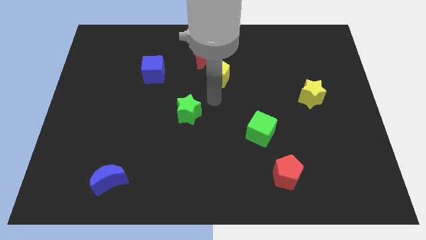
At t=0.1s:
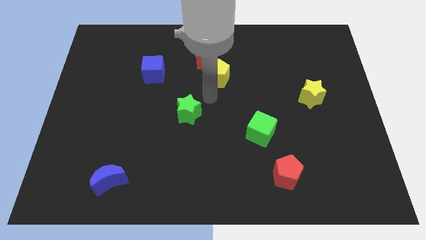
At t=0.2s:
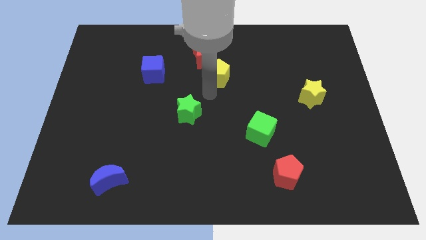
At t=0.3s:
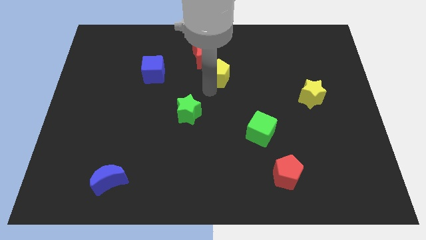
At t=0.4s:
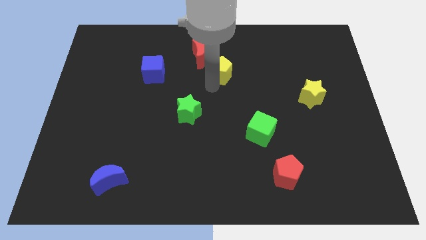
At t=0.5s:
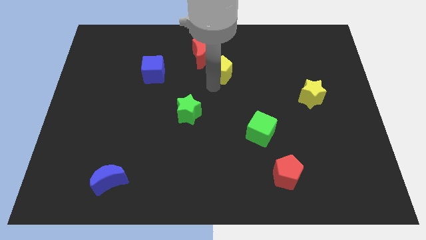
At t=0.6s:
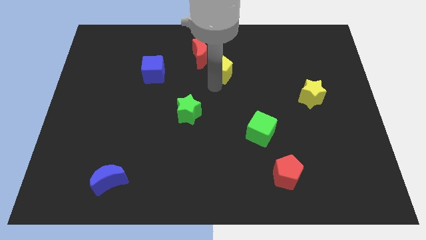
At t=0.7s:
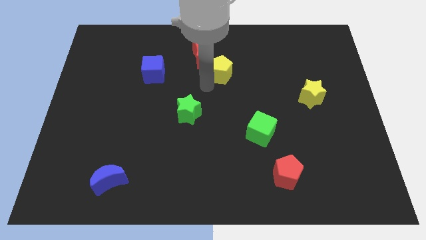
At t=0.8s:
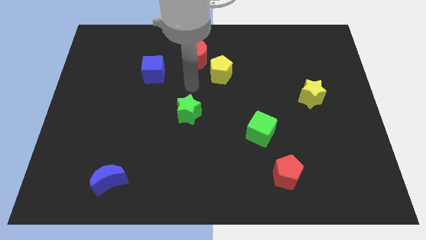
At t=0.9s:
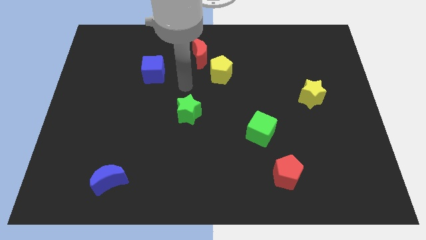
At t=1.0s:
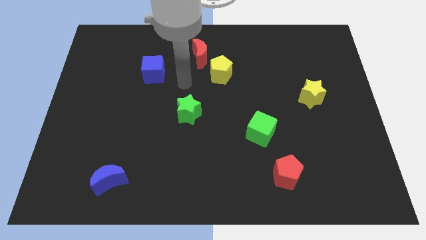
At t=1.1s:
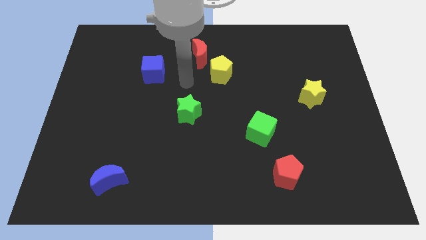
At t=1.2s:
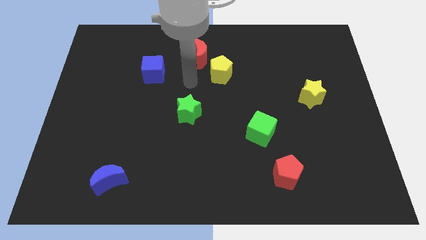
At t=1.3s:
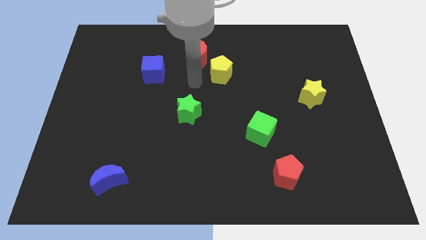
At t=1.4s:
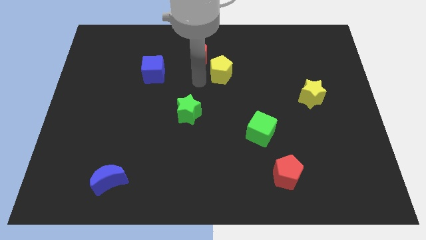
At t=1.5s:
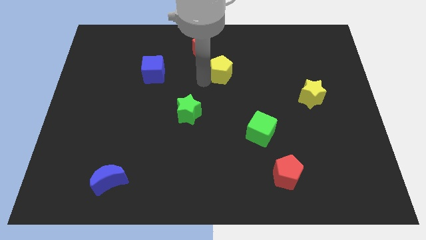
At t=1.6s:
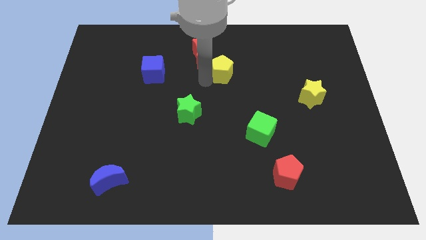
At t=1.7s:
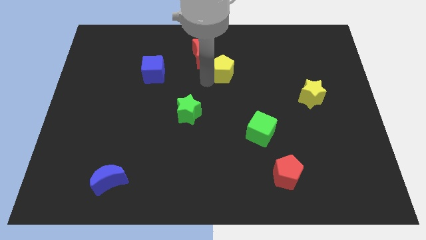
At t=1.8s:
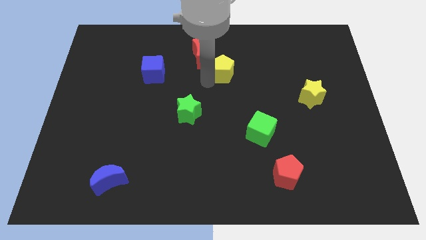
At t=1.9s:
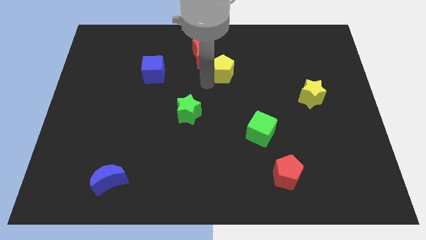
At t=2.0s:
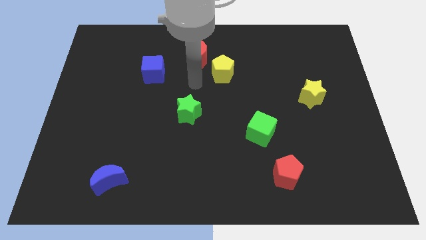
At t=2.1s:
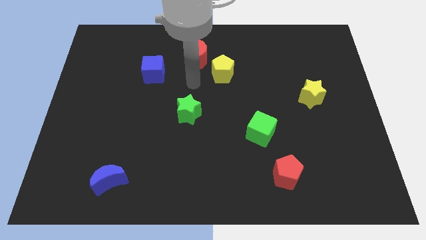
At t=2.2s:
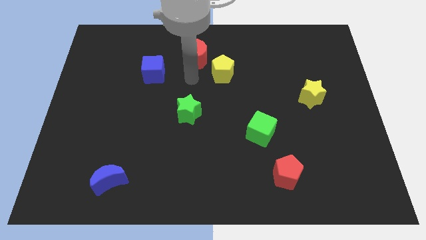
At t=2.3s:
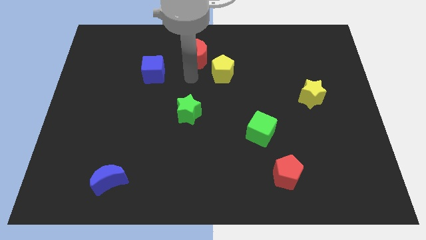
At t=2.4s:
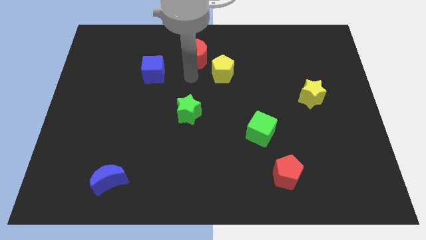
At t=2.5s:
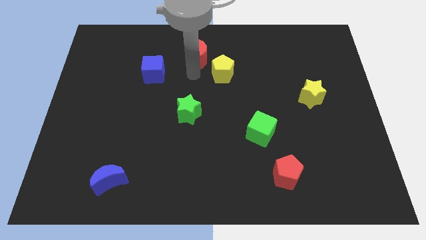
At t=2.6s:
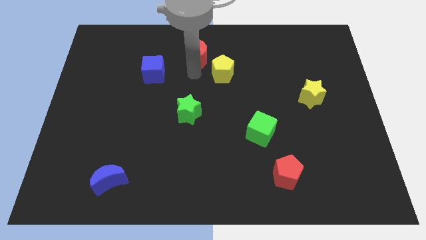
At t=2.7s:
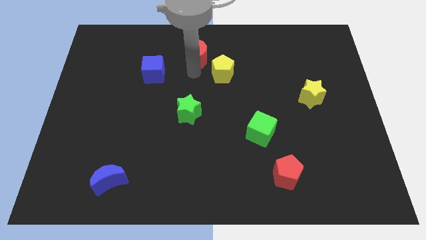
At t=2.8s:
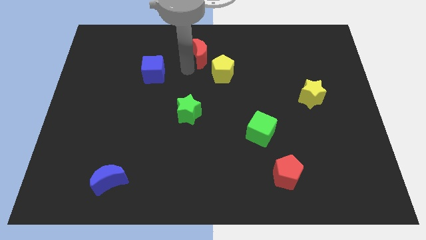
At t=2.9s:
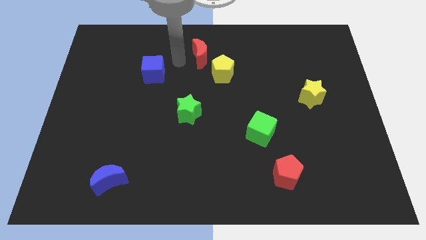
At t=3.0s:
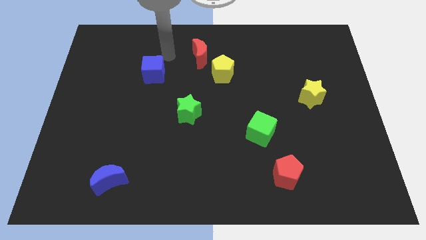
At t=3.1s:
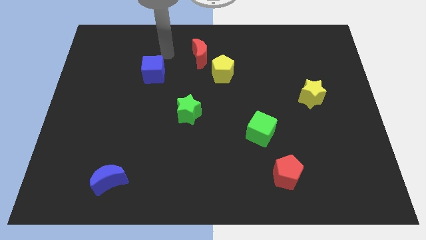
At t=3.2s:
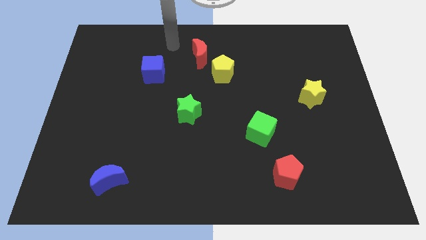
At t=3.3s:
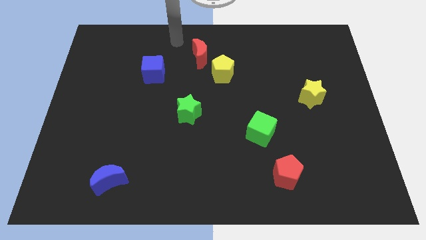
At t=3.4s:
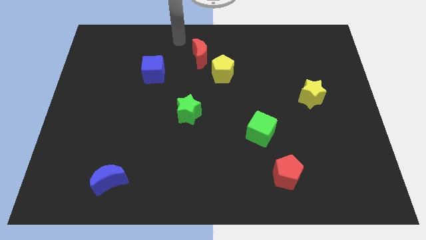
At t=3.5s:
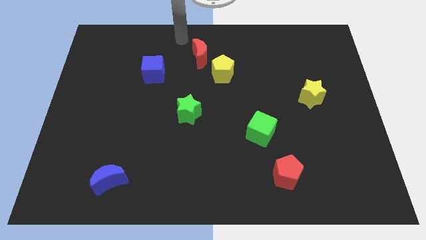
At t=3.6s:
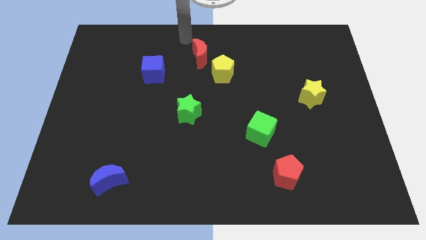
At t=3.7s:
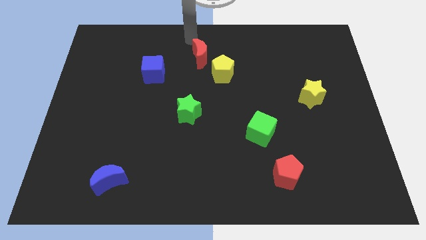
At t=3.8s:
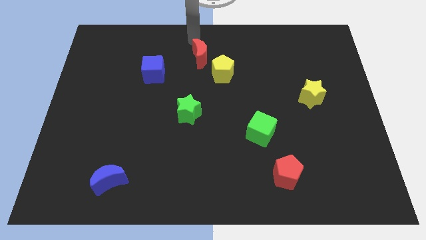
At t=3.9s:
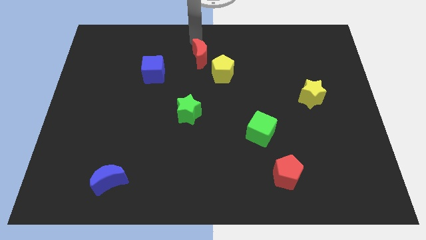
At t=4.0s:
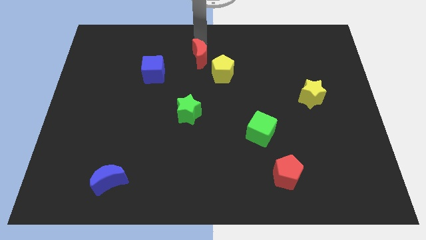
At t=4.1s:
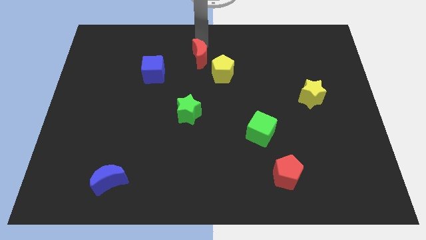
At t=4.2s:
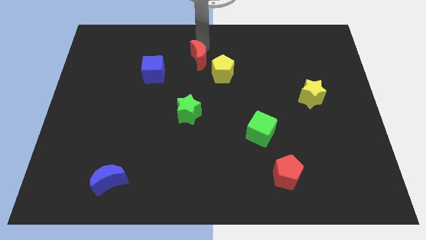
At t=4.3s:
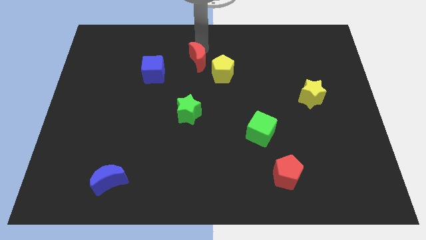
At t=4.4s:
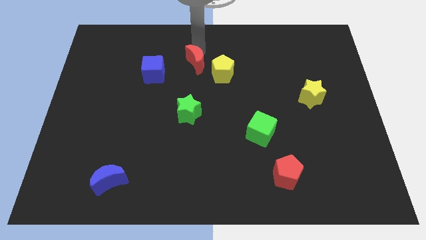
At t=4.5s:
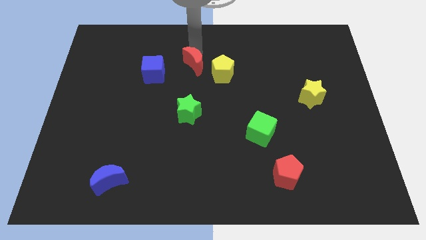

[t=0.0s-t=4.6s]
move the arm to the red moon

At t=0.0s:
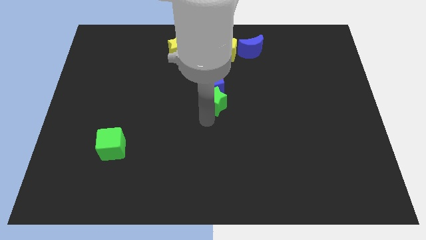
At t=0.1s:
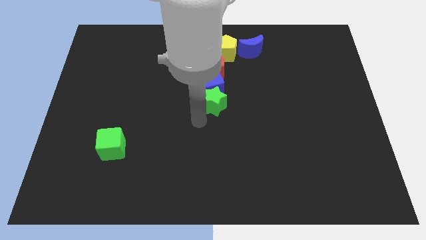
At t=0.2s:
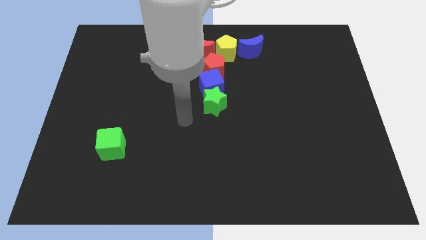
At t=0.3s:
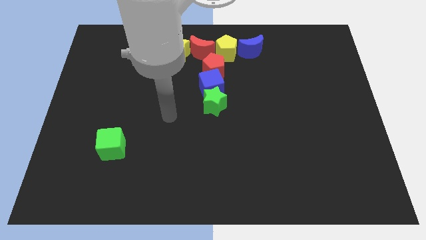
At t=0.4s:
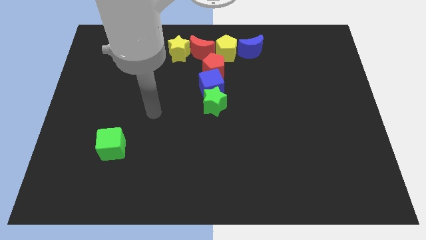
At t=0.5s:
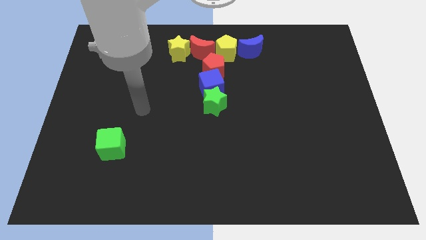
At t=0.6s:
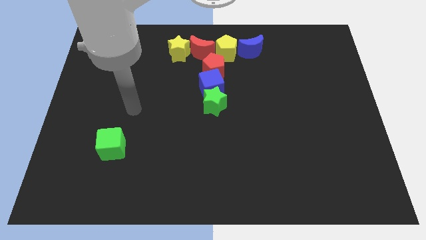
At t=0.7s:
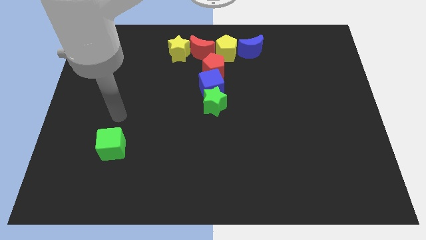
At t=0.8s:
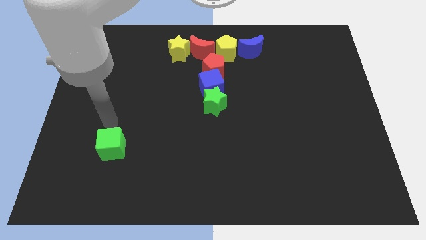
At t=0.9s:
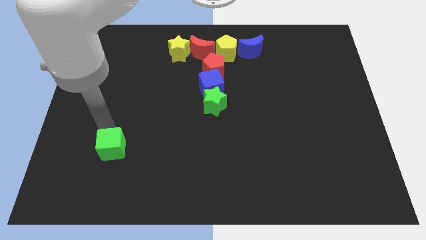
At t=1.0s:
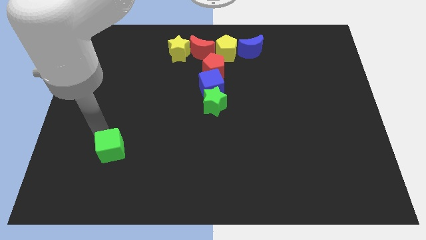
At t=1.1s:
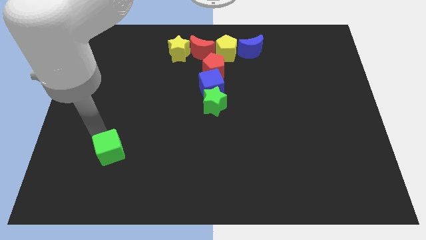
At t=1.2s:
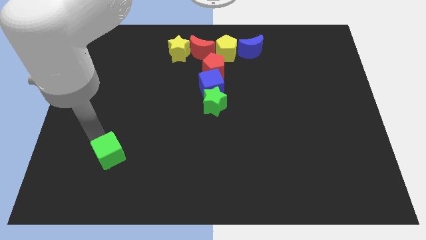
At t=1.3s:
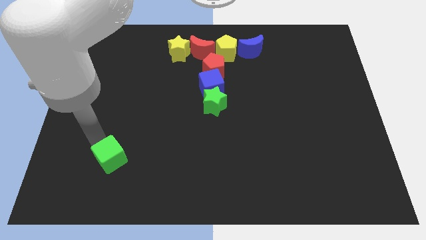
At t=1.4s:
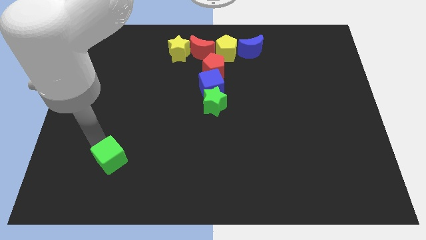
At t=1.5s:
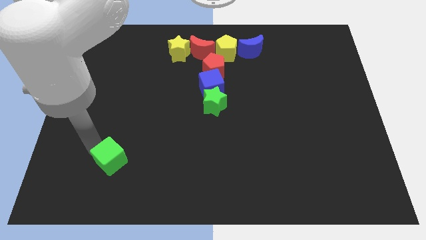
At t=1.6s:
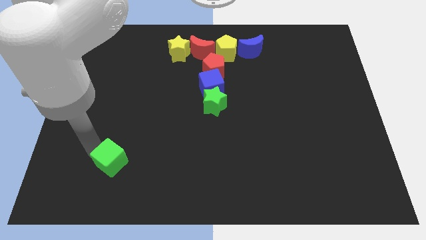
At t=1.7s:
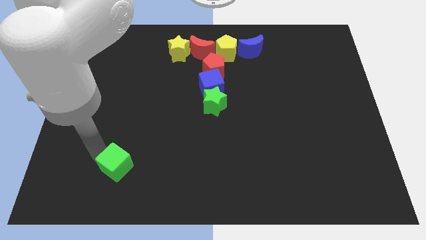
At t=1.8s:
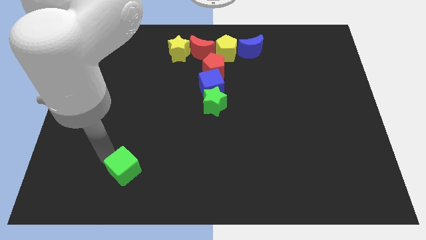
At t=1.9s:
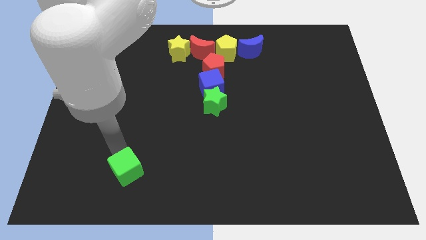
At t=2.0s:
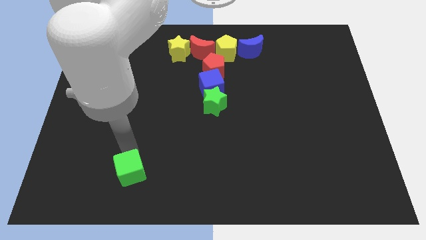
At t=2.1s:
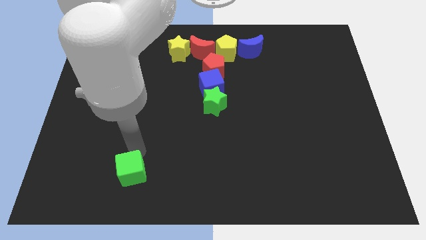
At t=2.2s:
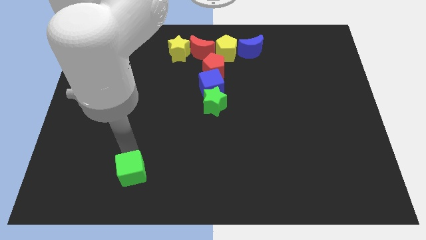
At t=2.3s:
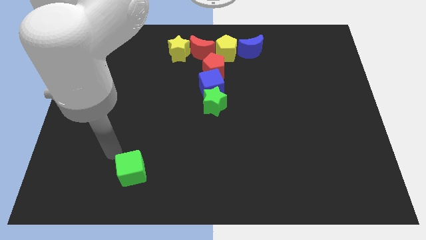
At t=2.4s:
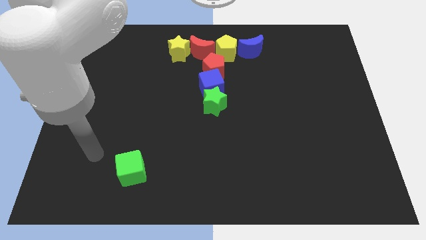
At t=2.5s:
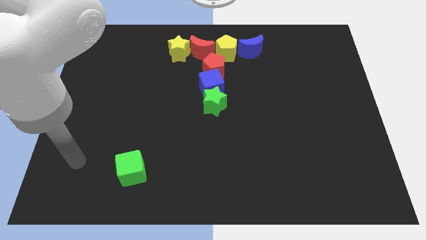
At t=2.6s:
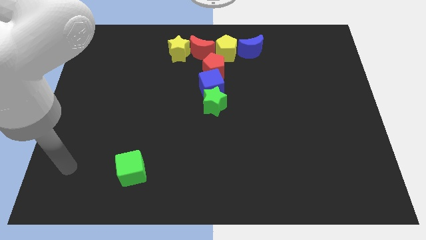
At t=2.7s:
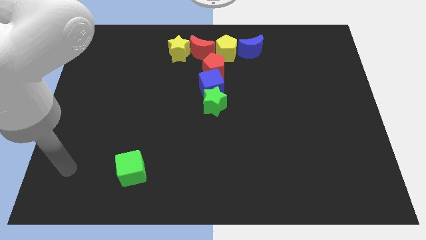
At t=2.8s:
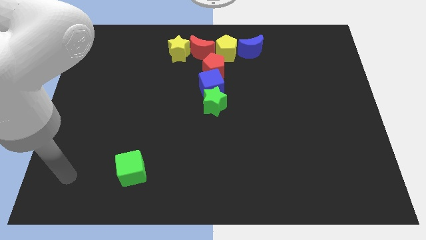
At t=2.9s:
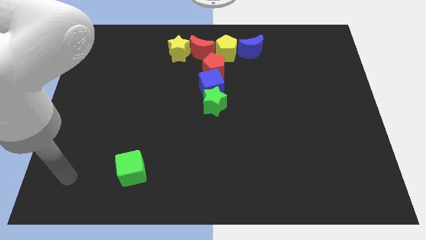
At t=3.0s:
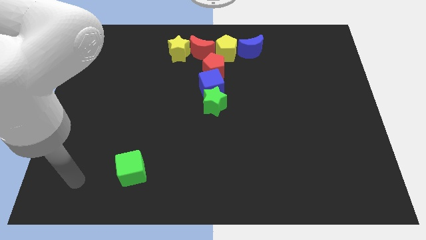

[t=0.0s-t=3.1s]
slightly move the green cube downwards

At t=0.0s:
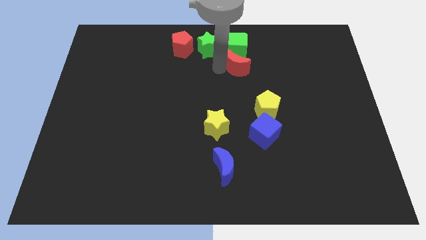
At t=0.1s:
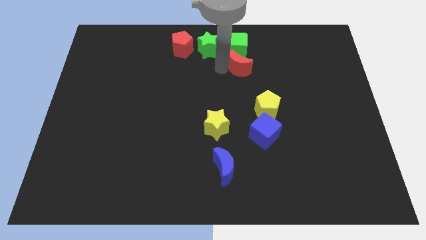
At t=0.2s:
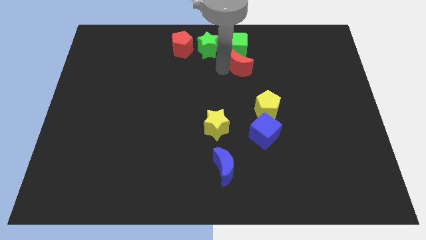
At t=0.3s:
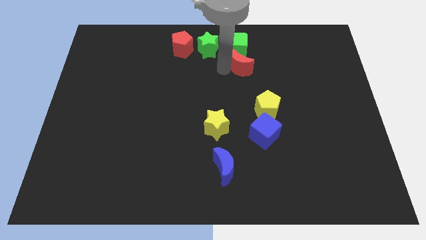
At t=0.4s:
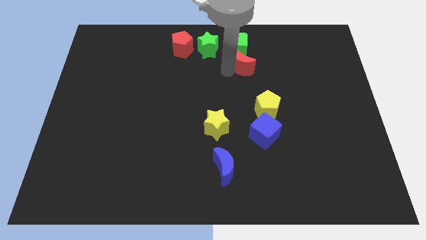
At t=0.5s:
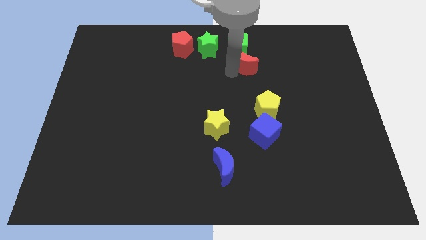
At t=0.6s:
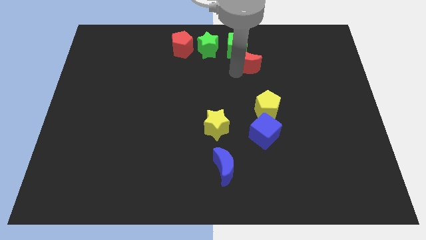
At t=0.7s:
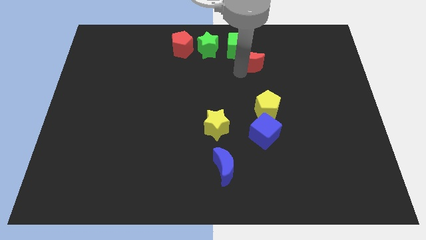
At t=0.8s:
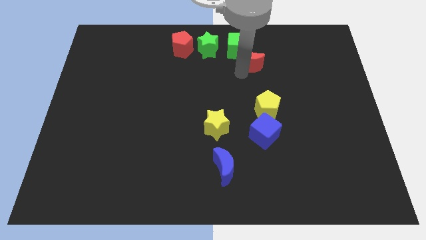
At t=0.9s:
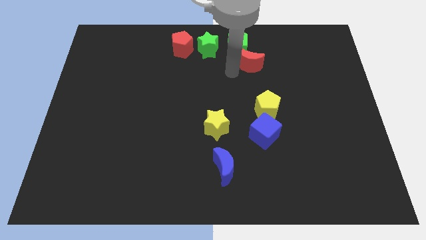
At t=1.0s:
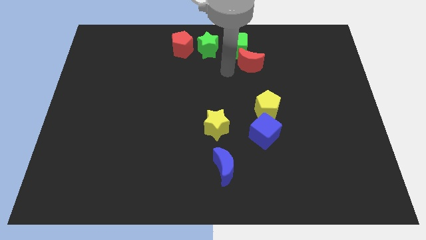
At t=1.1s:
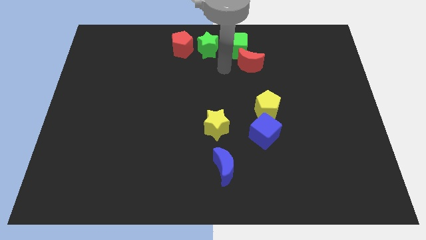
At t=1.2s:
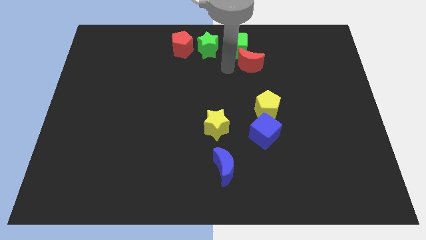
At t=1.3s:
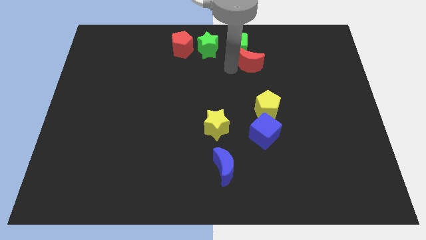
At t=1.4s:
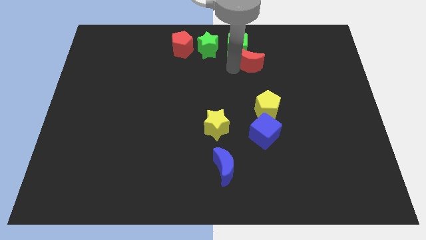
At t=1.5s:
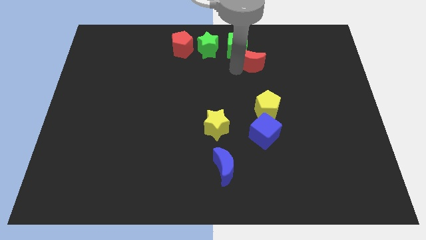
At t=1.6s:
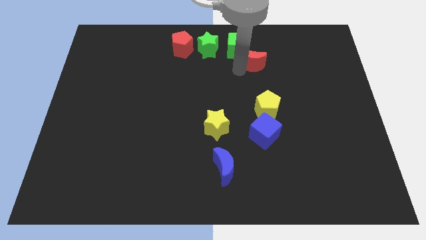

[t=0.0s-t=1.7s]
move the red crescent slightly towards the right side
